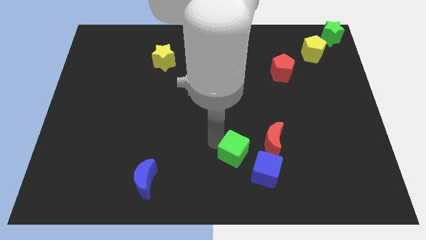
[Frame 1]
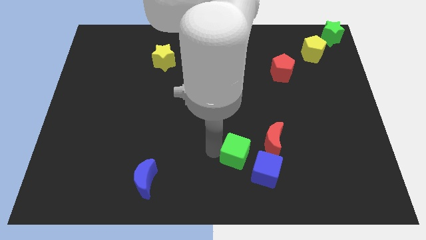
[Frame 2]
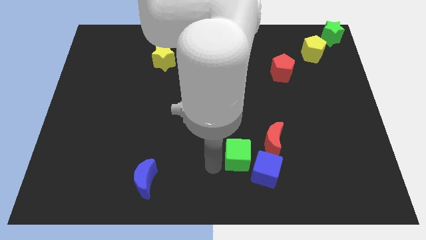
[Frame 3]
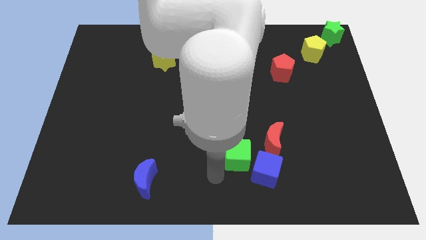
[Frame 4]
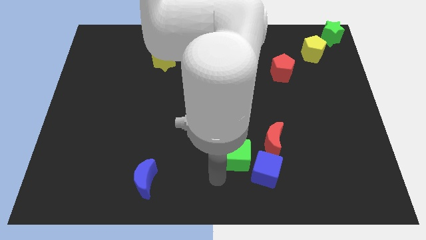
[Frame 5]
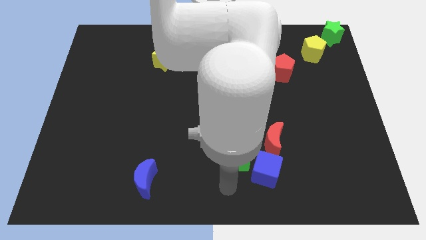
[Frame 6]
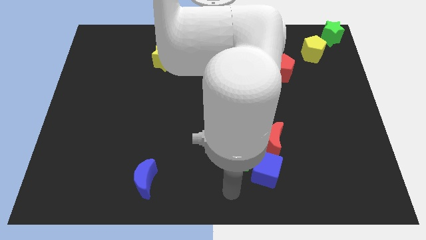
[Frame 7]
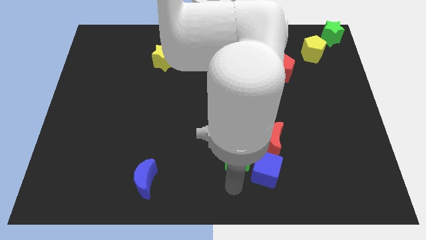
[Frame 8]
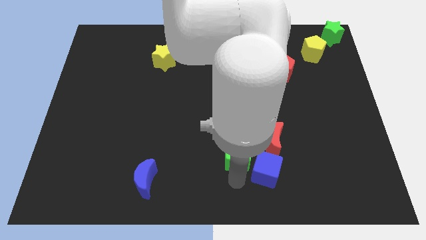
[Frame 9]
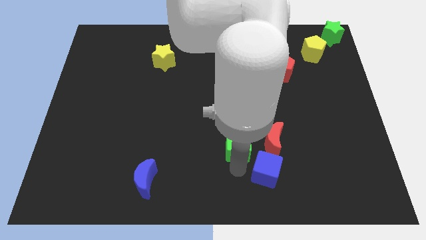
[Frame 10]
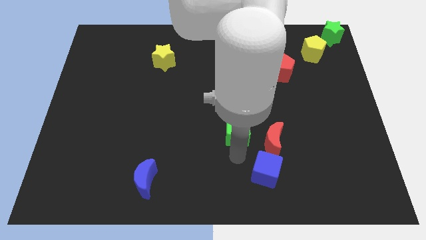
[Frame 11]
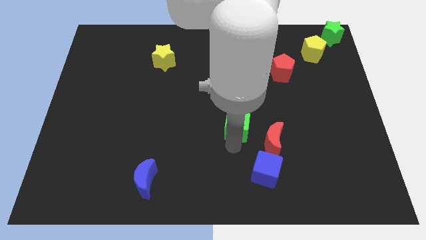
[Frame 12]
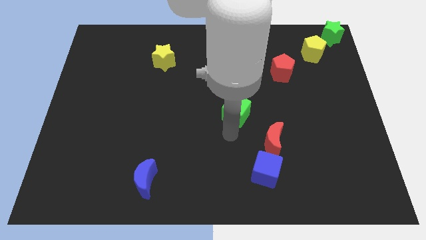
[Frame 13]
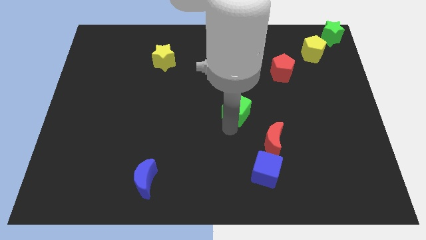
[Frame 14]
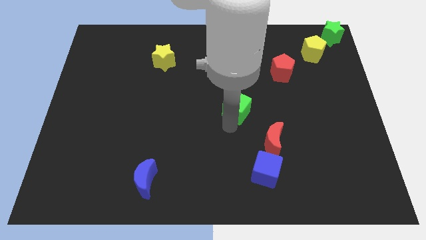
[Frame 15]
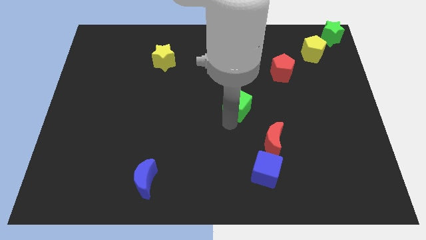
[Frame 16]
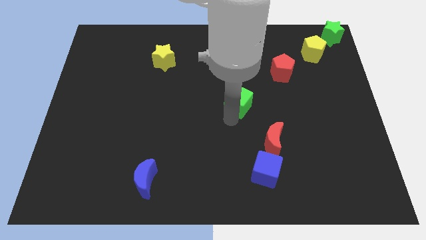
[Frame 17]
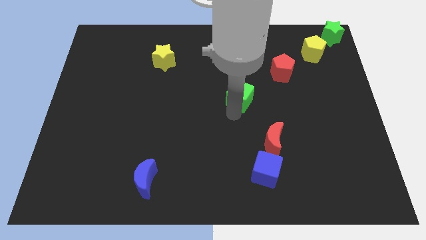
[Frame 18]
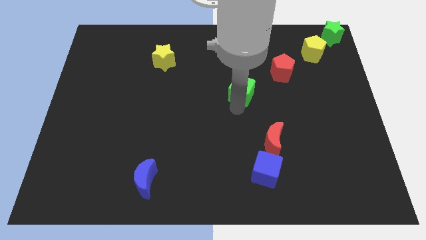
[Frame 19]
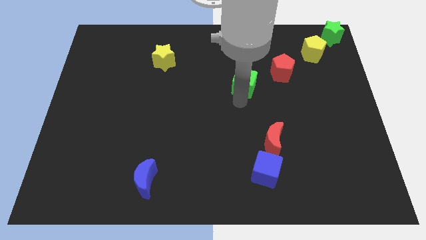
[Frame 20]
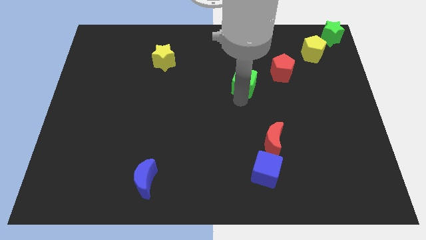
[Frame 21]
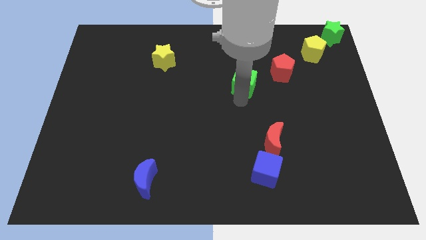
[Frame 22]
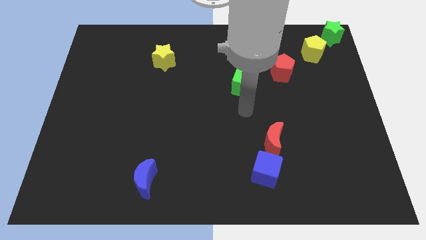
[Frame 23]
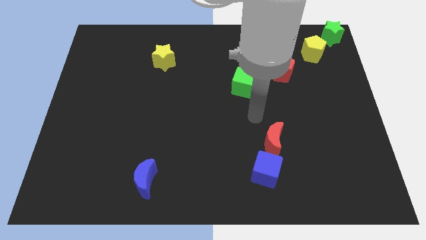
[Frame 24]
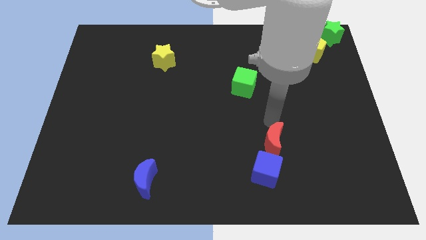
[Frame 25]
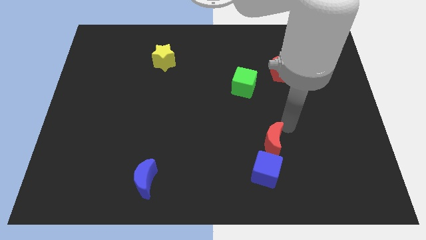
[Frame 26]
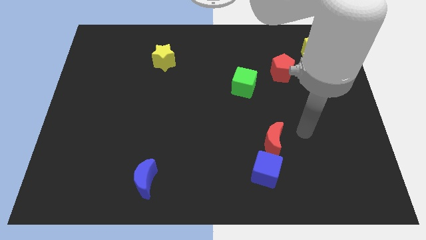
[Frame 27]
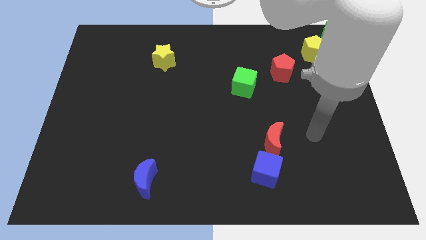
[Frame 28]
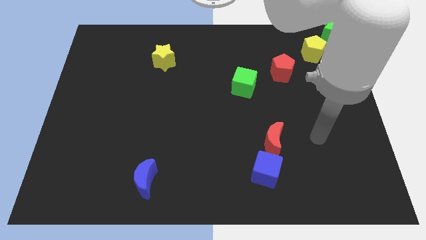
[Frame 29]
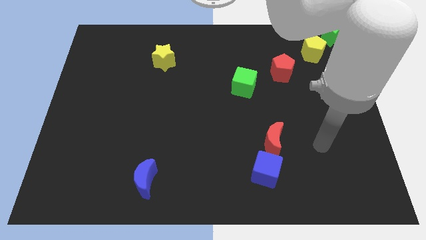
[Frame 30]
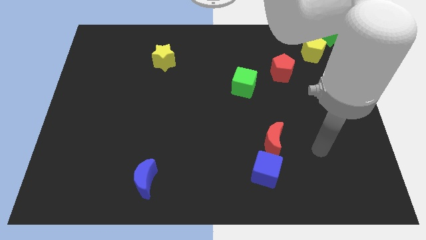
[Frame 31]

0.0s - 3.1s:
move the green cube to the center

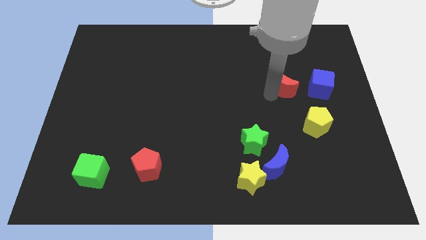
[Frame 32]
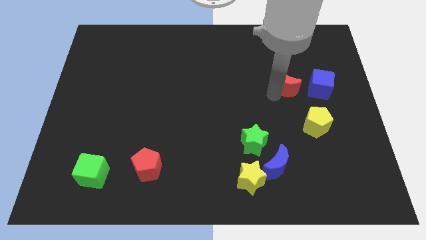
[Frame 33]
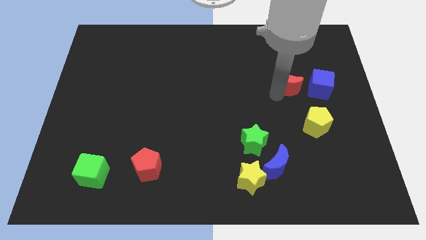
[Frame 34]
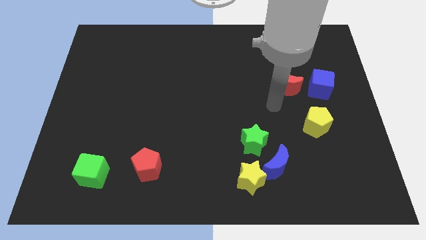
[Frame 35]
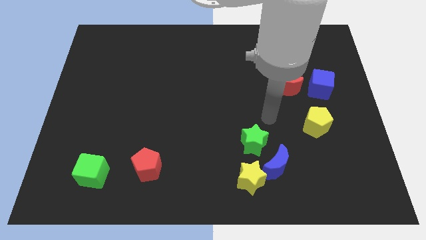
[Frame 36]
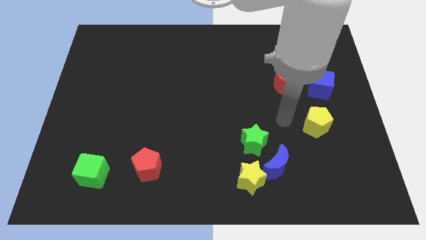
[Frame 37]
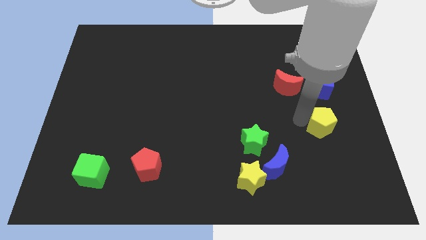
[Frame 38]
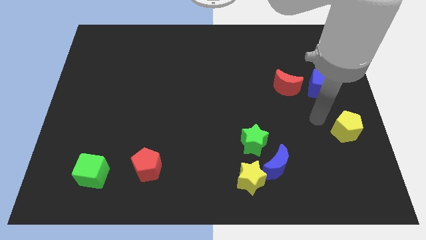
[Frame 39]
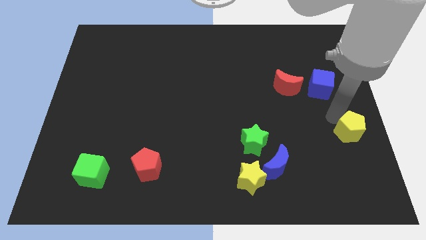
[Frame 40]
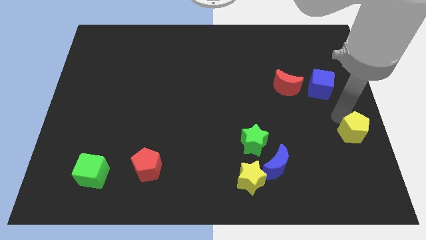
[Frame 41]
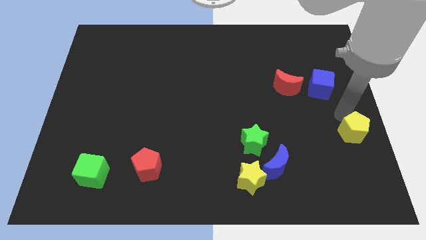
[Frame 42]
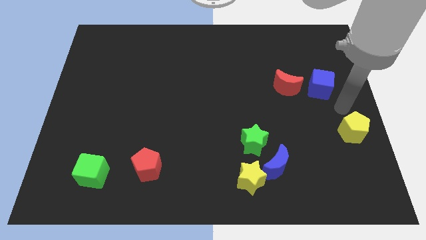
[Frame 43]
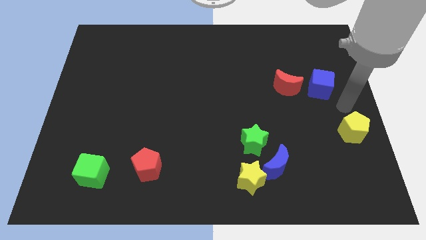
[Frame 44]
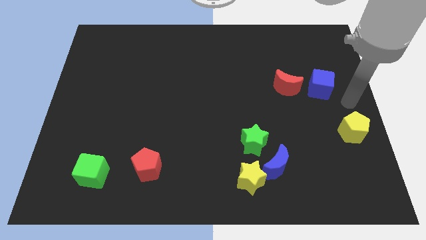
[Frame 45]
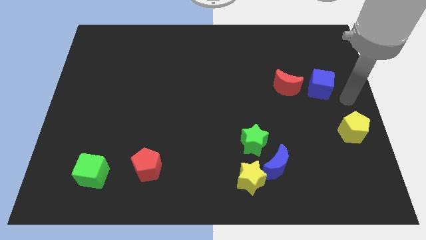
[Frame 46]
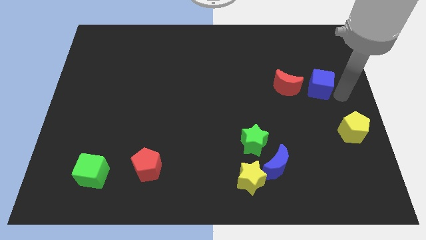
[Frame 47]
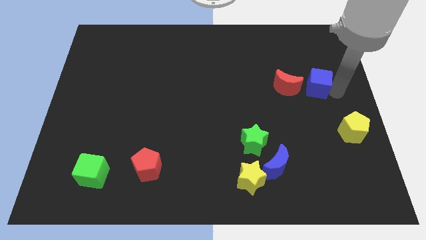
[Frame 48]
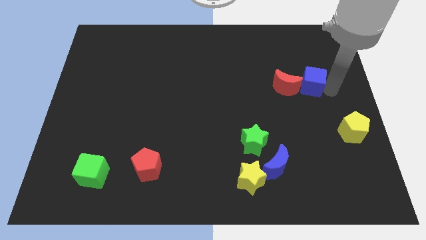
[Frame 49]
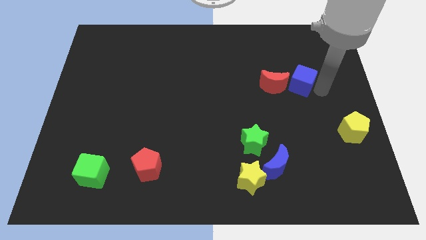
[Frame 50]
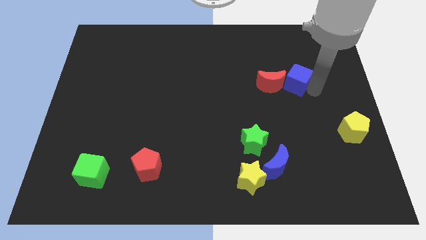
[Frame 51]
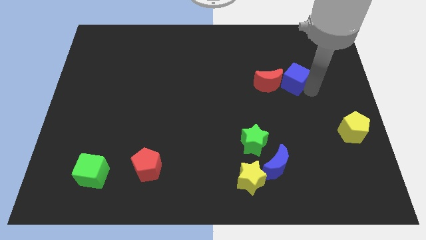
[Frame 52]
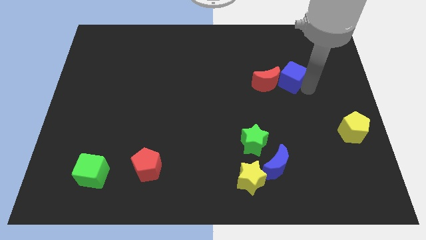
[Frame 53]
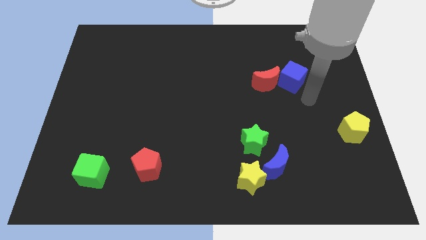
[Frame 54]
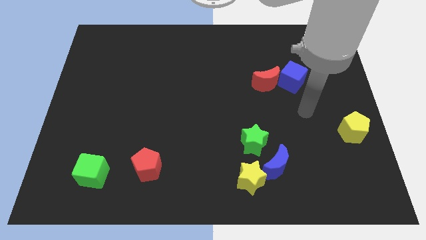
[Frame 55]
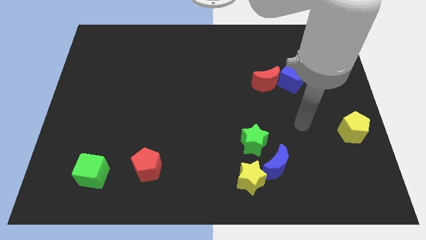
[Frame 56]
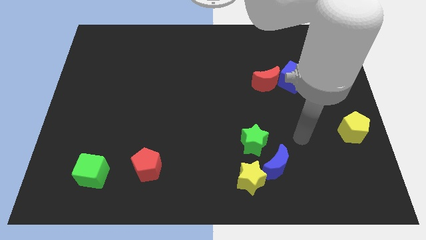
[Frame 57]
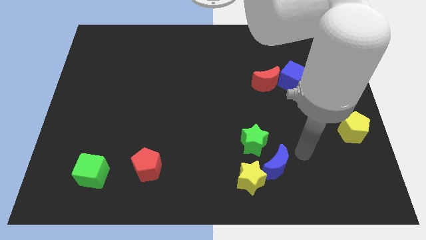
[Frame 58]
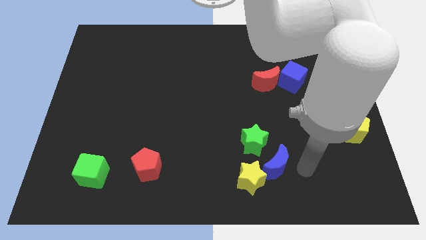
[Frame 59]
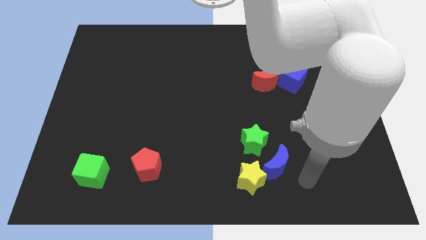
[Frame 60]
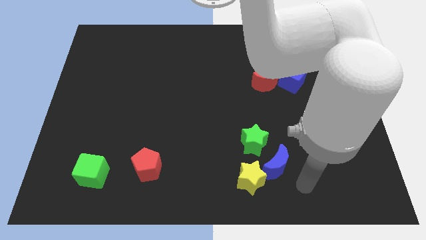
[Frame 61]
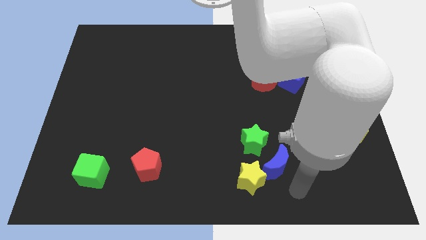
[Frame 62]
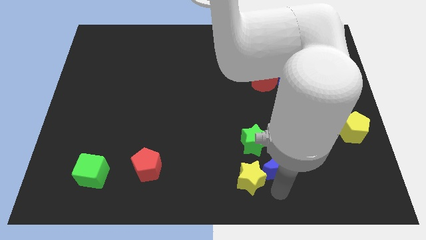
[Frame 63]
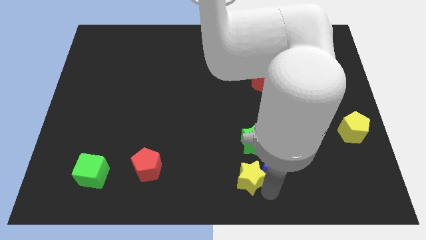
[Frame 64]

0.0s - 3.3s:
move the blue cube into the red crescent towards the top right of the board

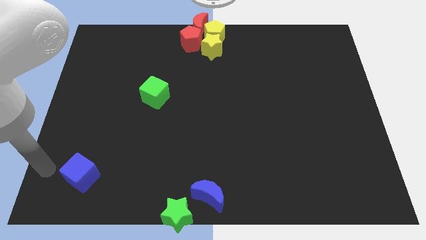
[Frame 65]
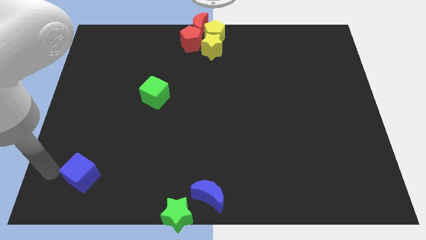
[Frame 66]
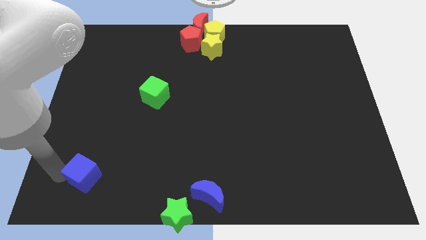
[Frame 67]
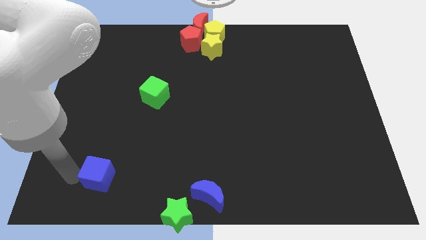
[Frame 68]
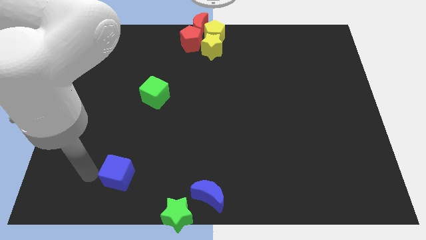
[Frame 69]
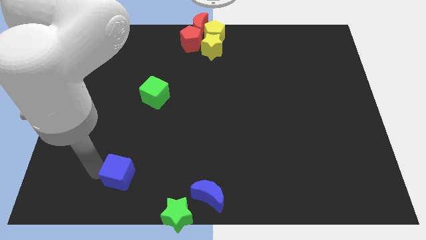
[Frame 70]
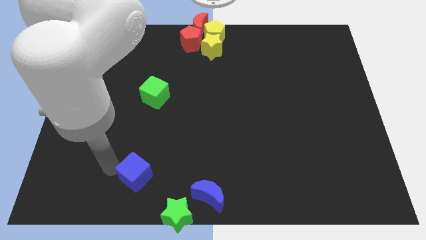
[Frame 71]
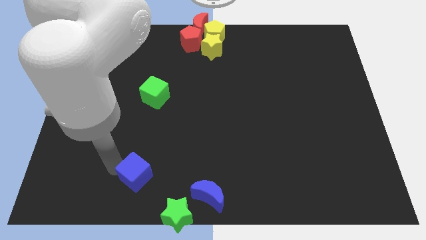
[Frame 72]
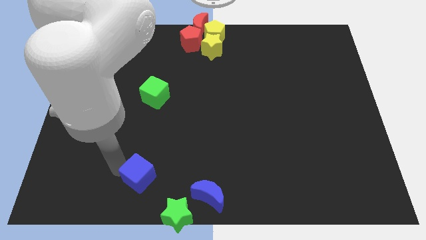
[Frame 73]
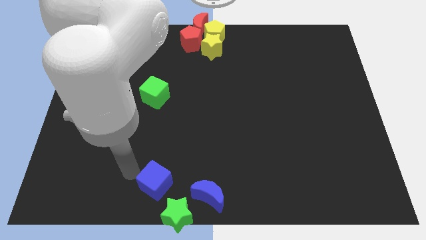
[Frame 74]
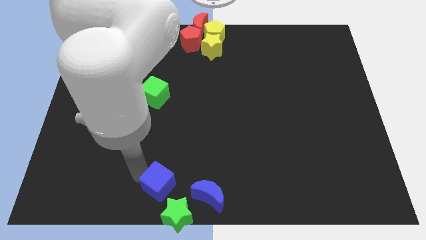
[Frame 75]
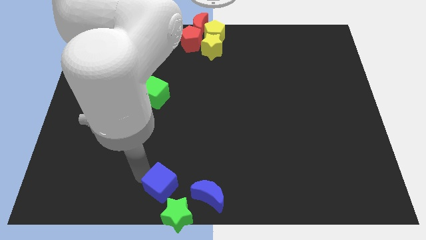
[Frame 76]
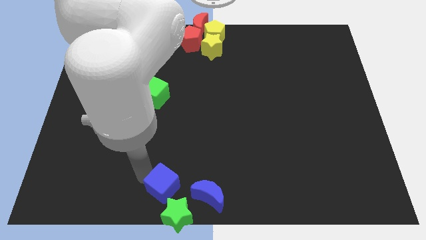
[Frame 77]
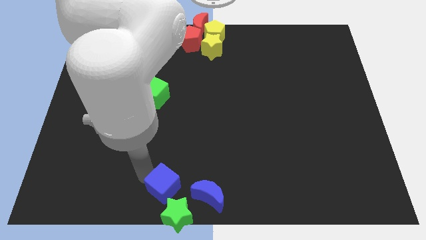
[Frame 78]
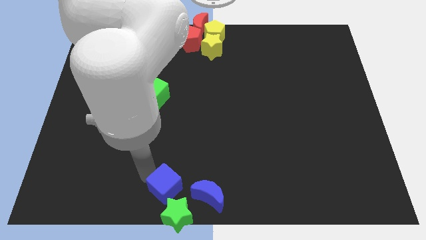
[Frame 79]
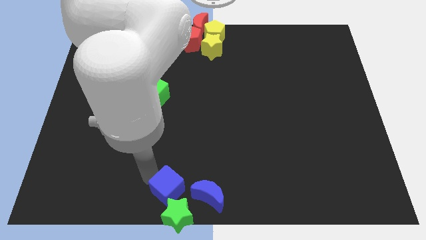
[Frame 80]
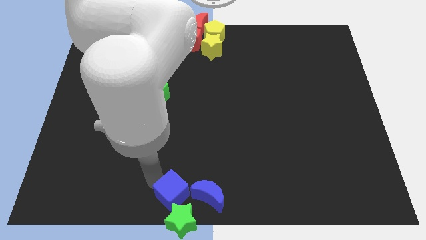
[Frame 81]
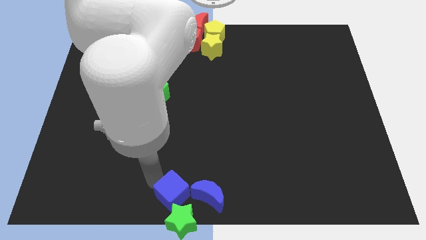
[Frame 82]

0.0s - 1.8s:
slightly touch green star with blue cube

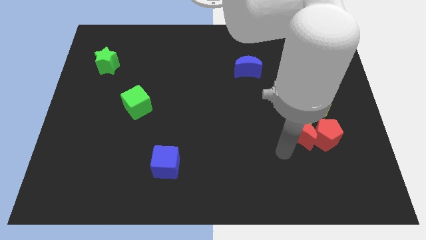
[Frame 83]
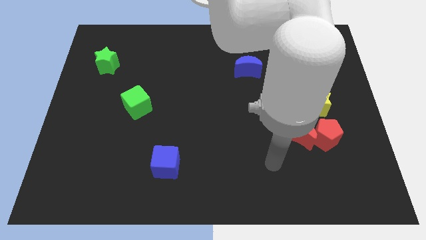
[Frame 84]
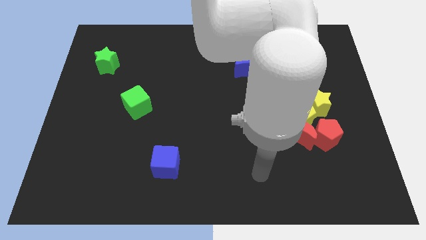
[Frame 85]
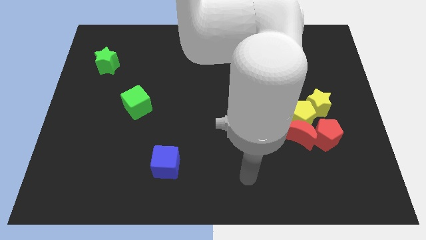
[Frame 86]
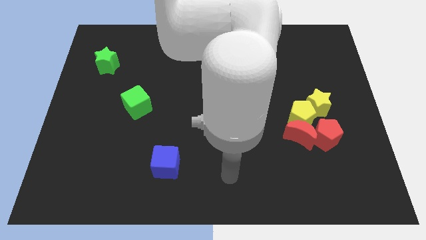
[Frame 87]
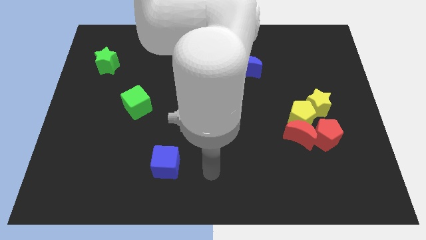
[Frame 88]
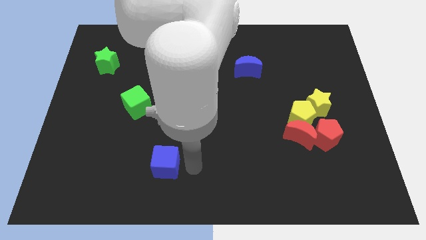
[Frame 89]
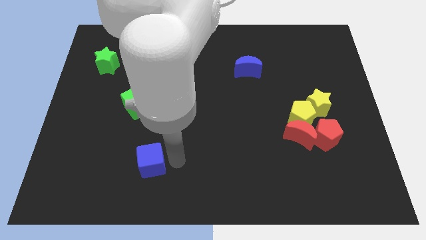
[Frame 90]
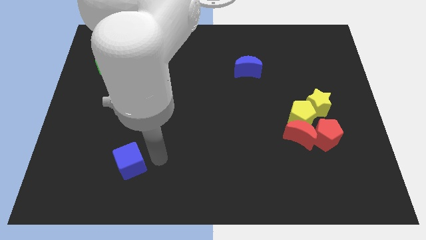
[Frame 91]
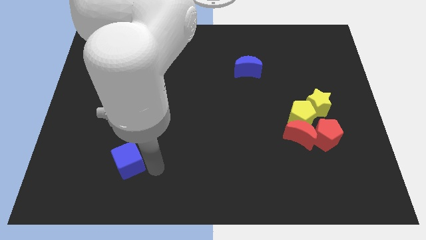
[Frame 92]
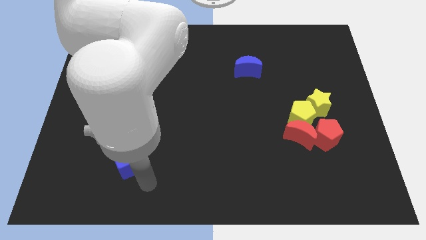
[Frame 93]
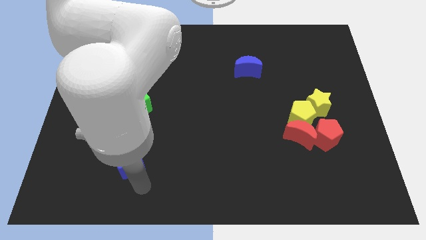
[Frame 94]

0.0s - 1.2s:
push the blue cube below the green cube
